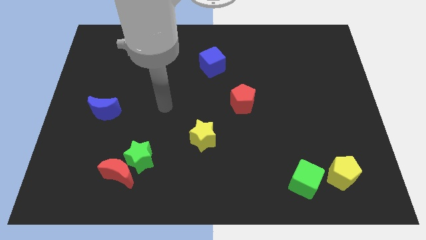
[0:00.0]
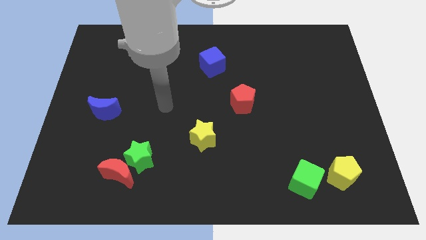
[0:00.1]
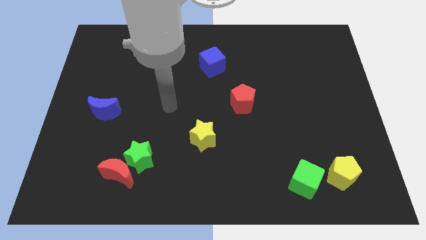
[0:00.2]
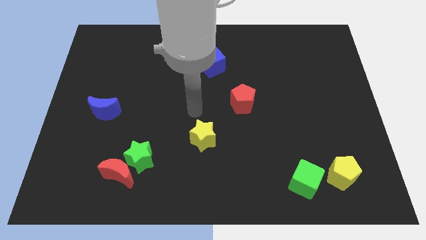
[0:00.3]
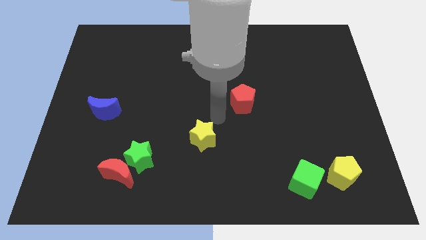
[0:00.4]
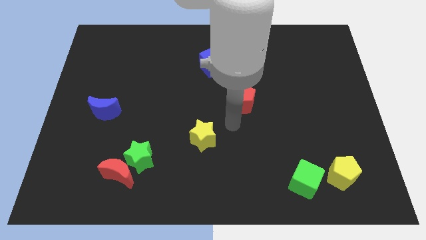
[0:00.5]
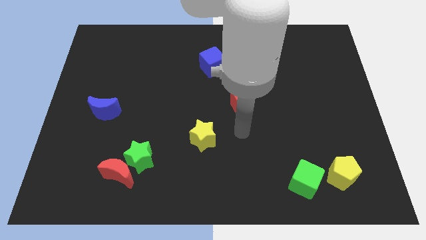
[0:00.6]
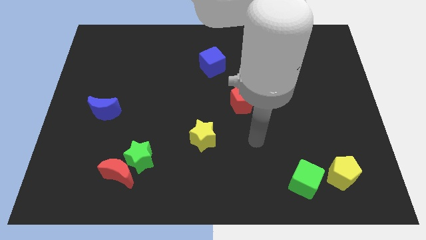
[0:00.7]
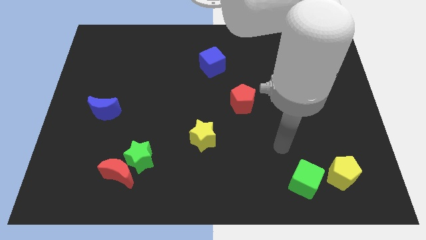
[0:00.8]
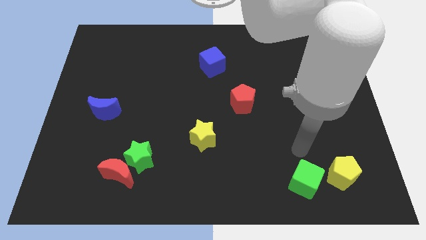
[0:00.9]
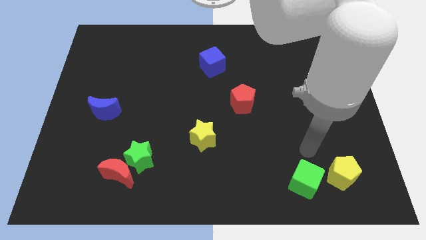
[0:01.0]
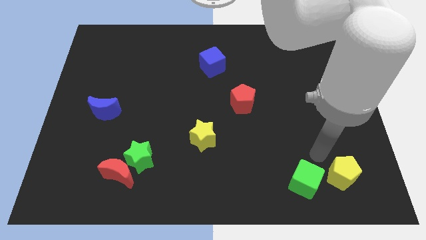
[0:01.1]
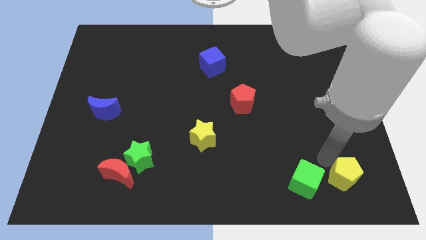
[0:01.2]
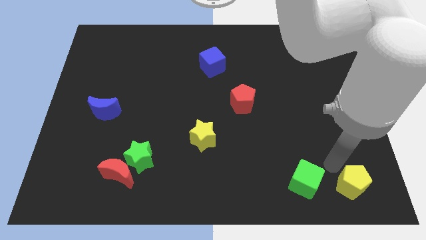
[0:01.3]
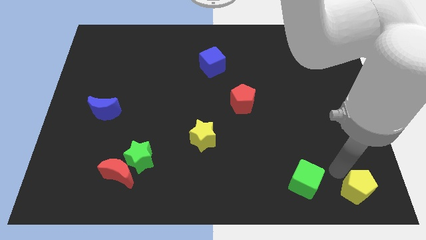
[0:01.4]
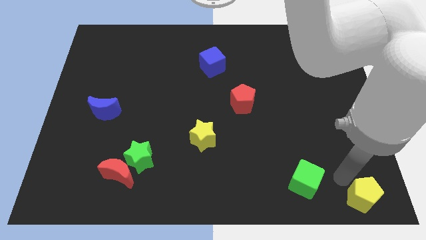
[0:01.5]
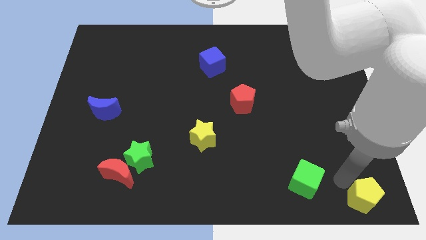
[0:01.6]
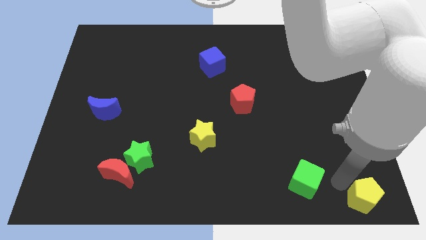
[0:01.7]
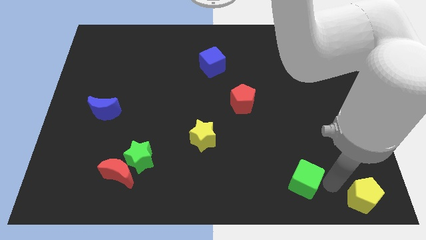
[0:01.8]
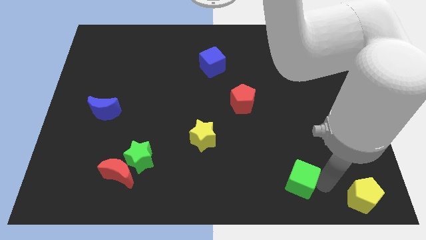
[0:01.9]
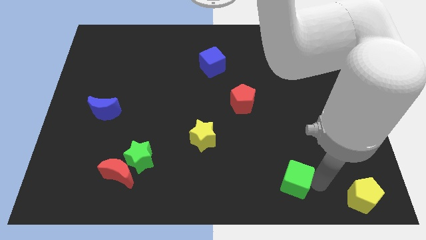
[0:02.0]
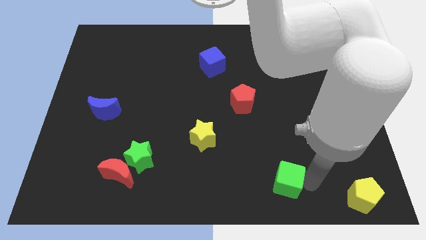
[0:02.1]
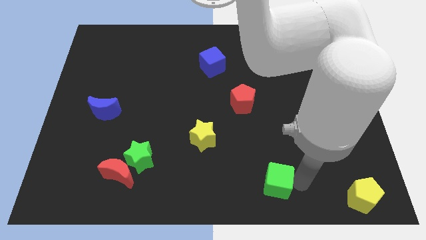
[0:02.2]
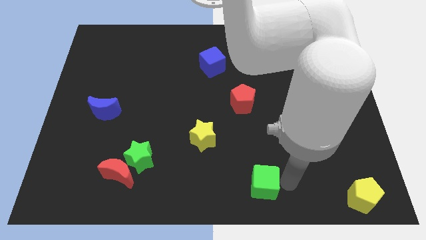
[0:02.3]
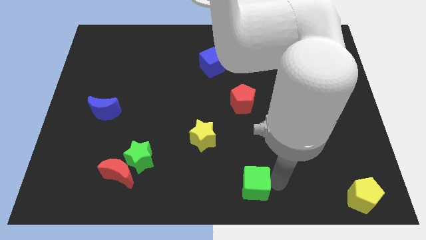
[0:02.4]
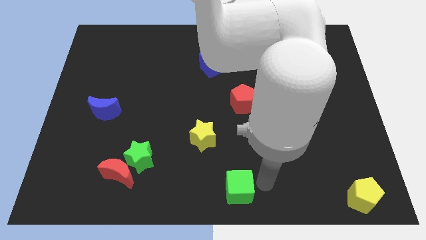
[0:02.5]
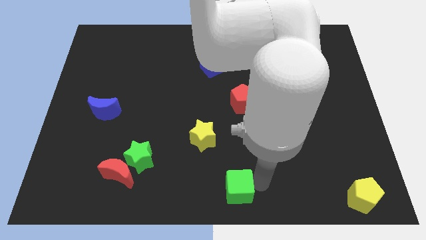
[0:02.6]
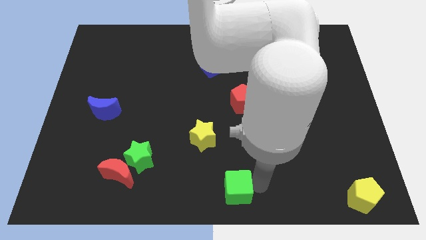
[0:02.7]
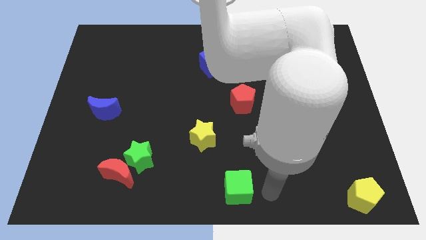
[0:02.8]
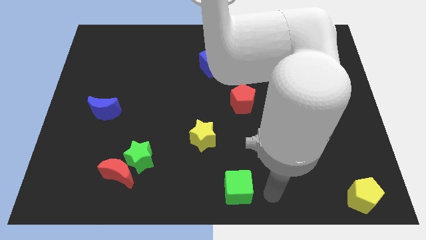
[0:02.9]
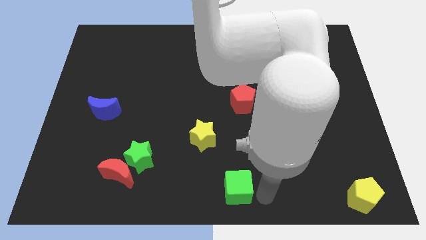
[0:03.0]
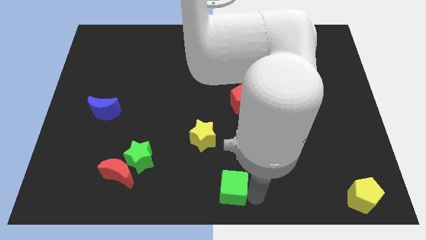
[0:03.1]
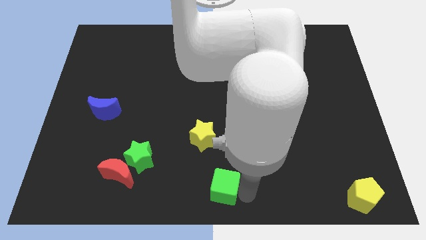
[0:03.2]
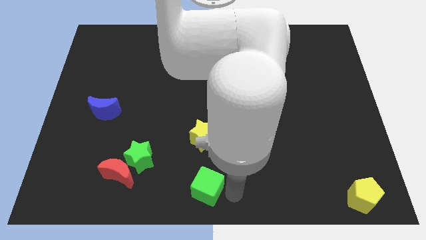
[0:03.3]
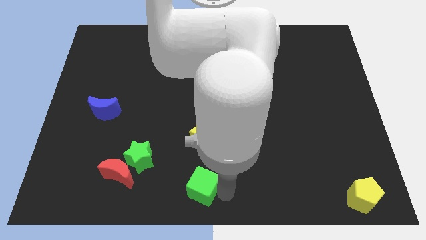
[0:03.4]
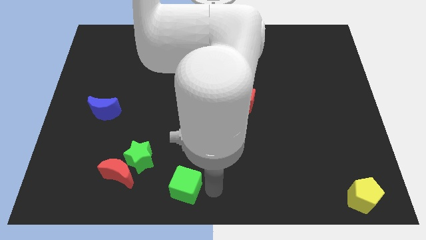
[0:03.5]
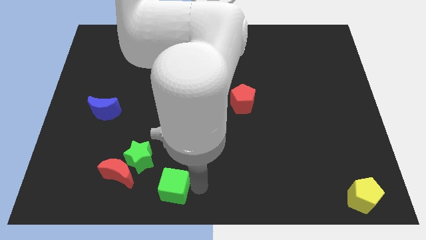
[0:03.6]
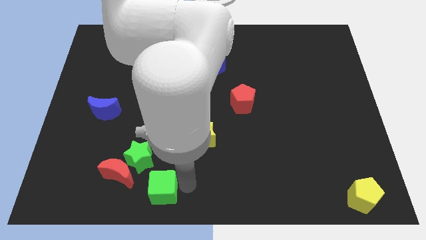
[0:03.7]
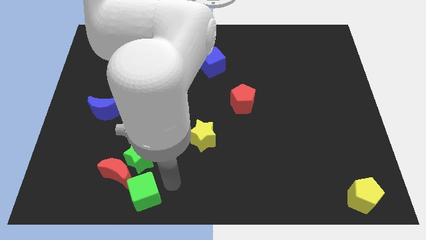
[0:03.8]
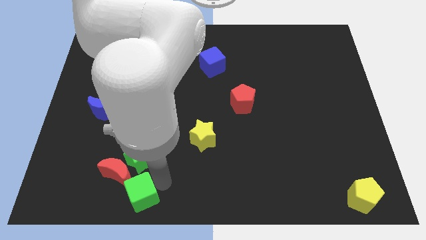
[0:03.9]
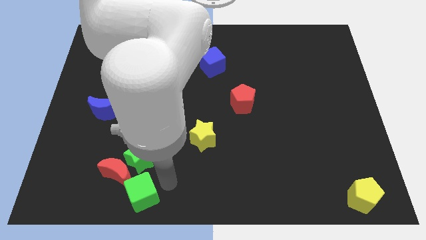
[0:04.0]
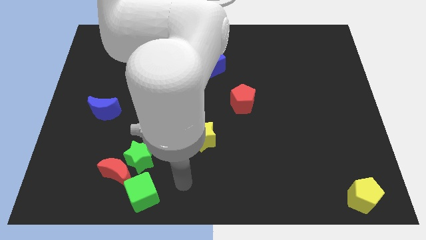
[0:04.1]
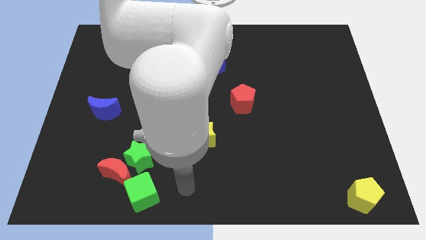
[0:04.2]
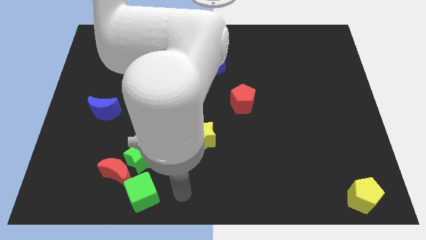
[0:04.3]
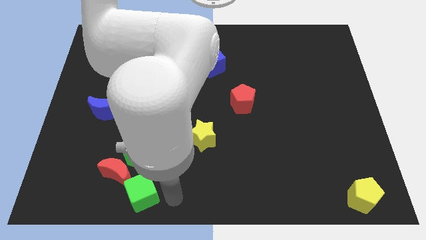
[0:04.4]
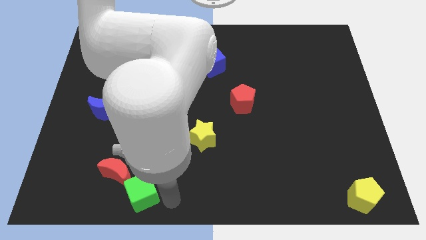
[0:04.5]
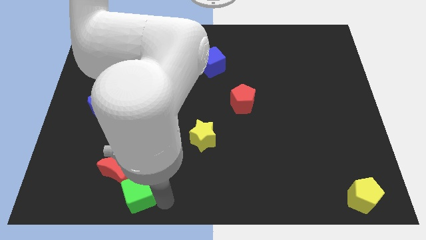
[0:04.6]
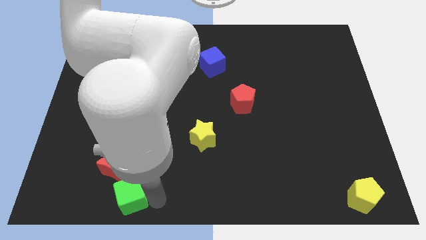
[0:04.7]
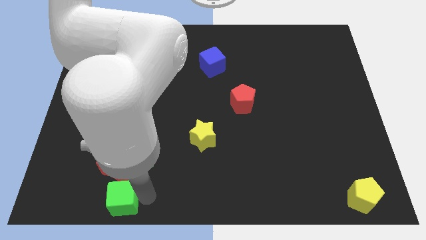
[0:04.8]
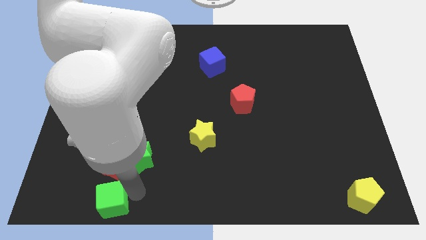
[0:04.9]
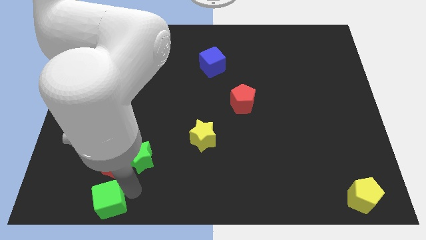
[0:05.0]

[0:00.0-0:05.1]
slide the green cube close to the red moon

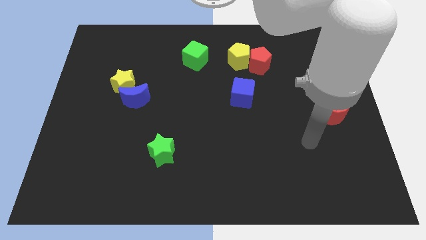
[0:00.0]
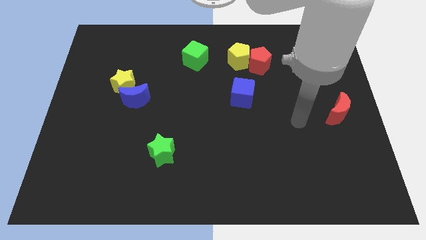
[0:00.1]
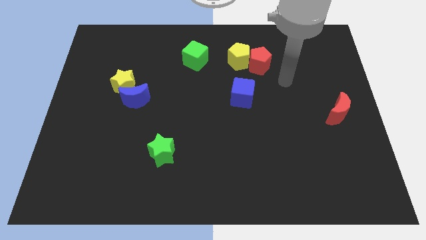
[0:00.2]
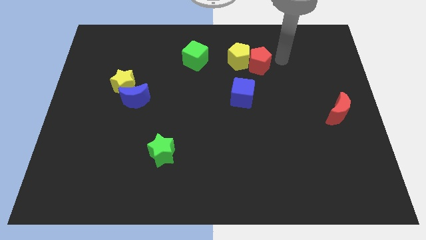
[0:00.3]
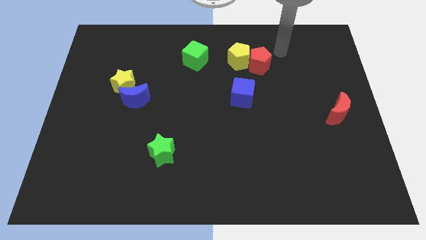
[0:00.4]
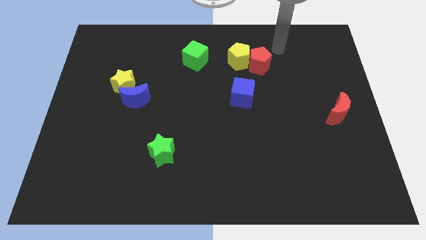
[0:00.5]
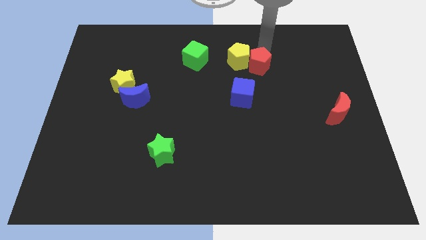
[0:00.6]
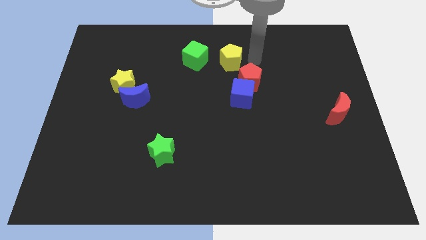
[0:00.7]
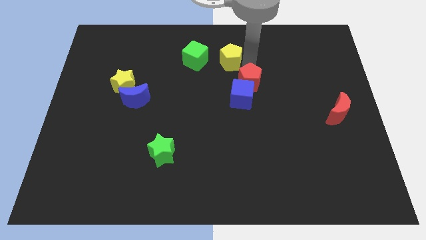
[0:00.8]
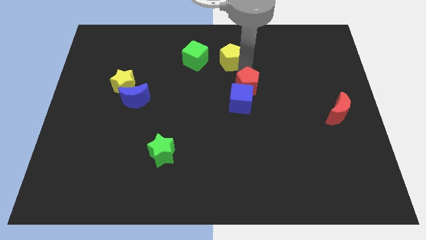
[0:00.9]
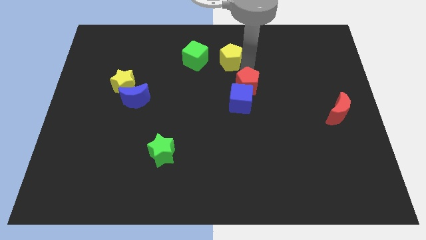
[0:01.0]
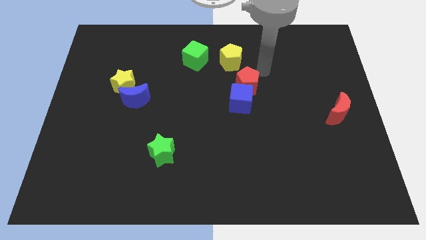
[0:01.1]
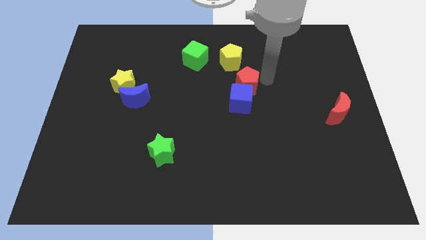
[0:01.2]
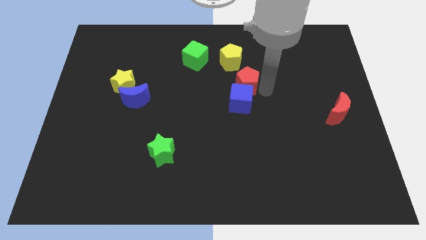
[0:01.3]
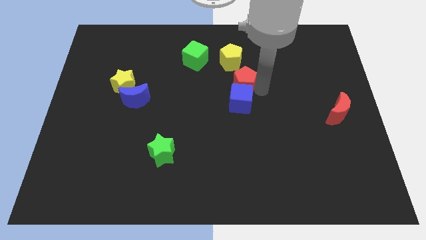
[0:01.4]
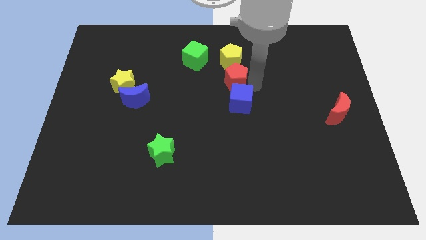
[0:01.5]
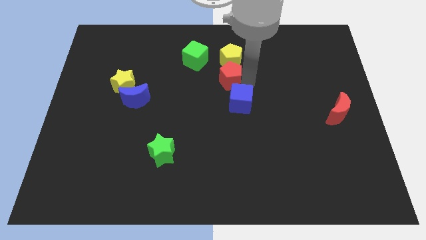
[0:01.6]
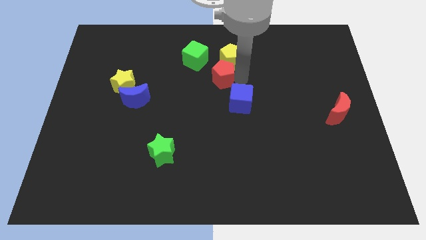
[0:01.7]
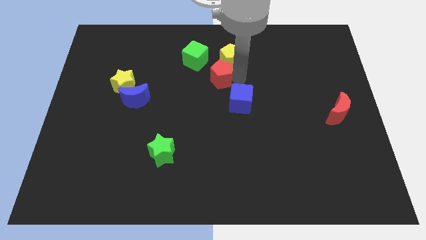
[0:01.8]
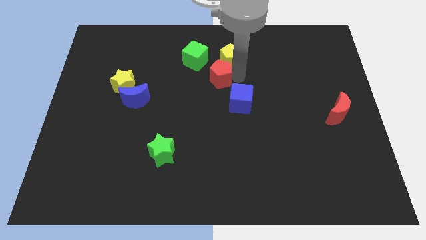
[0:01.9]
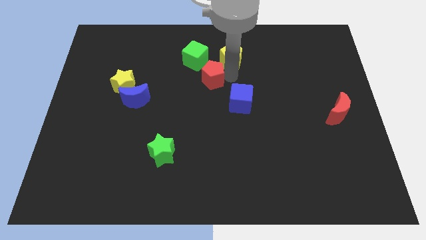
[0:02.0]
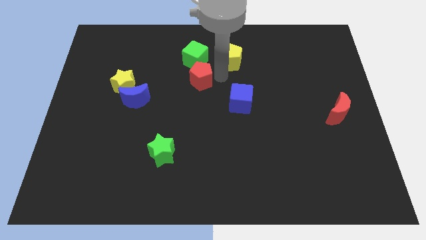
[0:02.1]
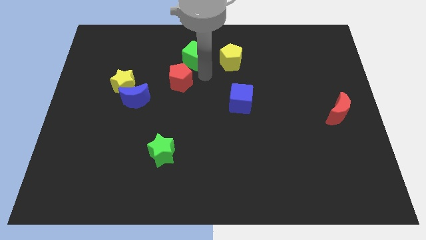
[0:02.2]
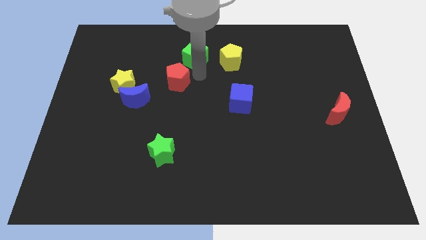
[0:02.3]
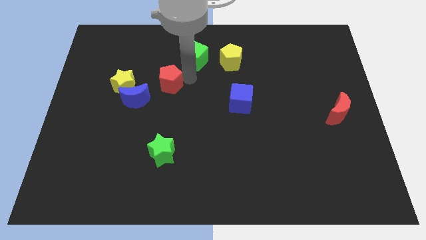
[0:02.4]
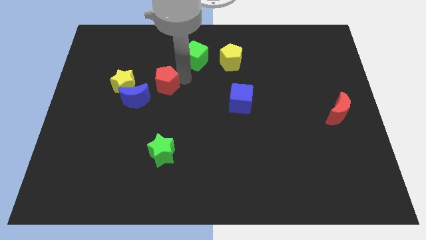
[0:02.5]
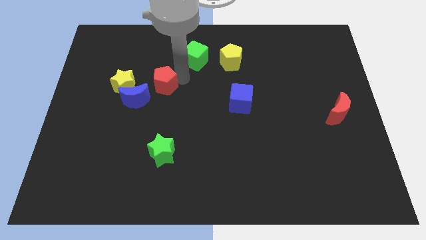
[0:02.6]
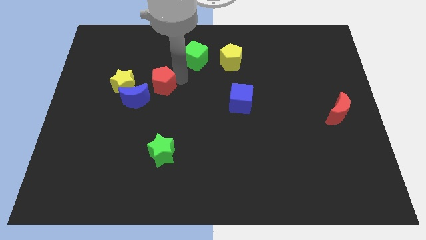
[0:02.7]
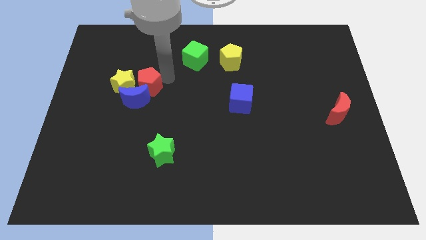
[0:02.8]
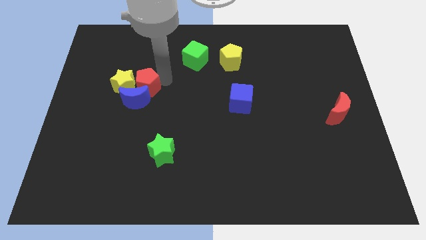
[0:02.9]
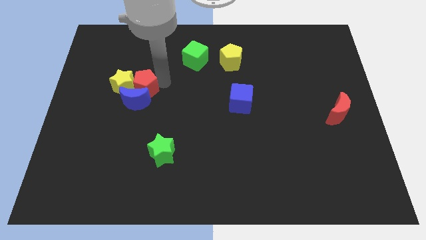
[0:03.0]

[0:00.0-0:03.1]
push the red pentagon next to the blue moon

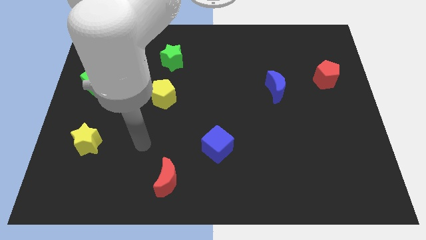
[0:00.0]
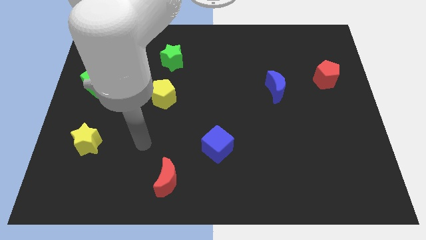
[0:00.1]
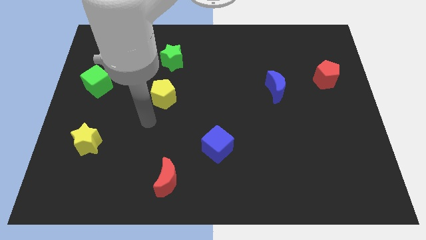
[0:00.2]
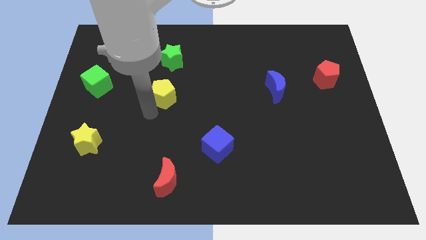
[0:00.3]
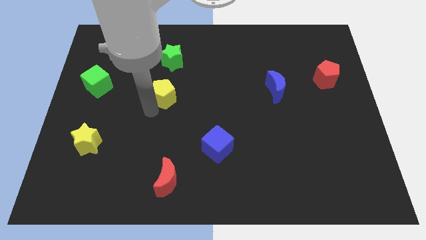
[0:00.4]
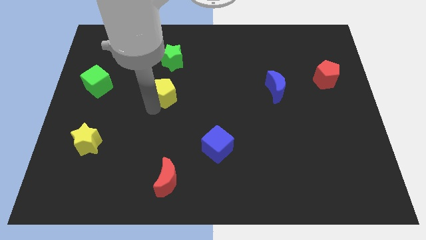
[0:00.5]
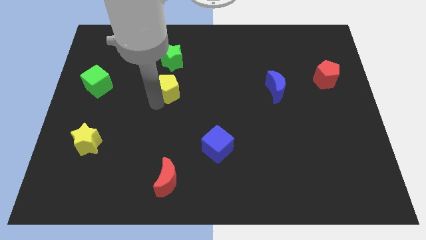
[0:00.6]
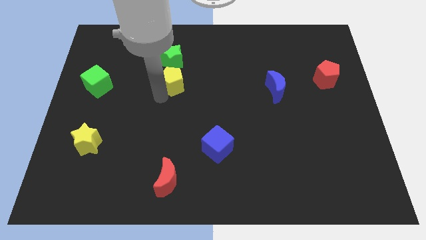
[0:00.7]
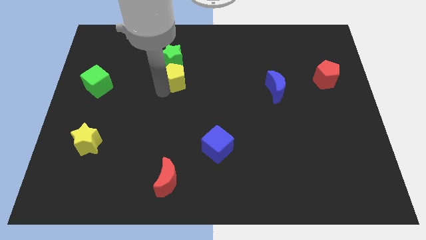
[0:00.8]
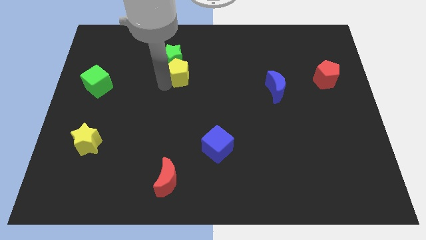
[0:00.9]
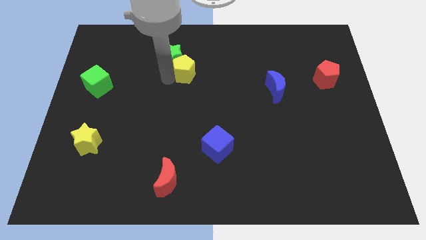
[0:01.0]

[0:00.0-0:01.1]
push the yellow pentagon next to the green star
